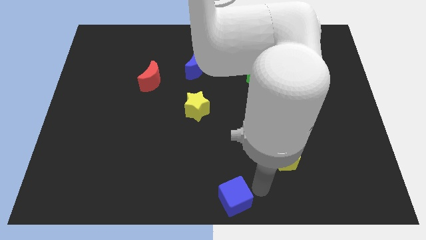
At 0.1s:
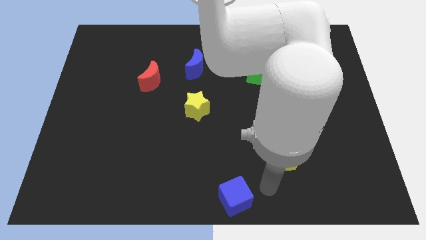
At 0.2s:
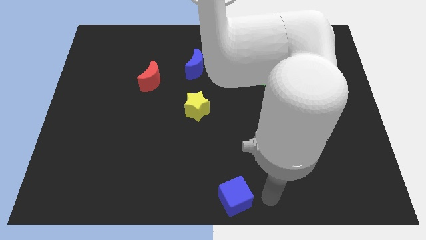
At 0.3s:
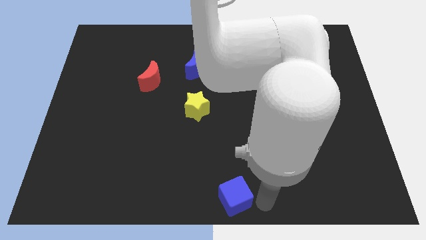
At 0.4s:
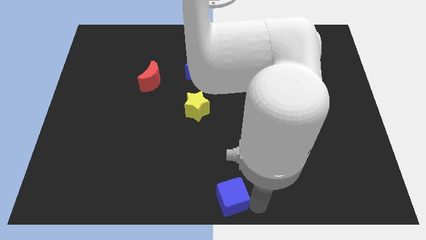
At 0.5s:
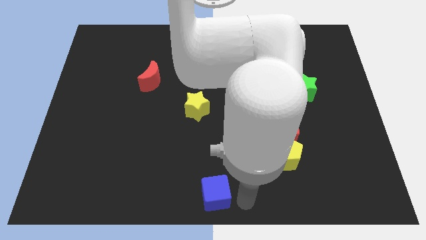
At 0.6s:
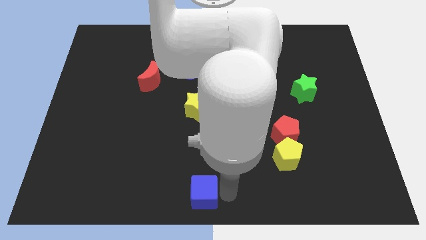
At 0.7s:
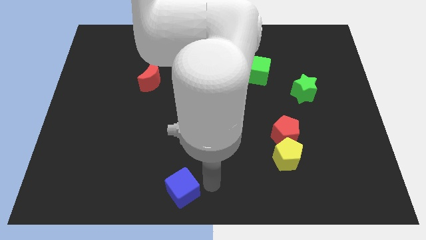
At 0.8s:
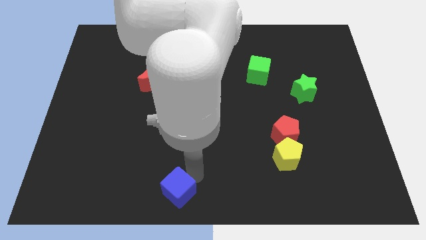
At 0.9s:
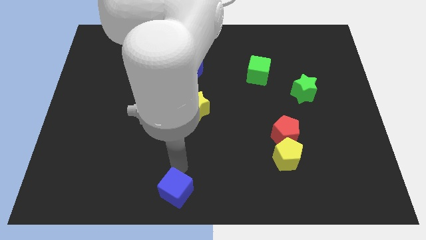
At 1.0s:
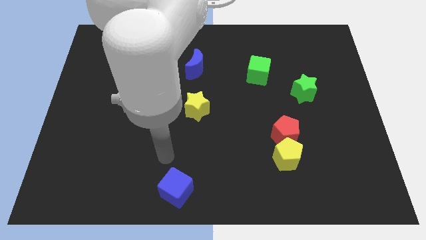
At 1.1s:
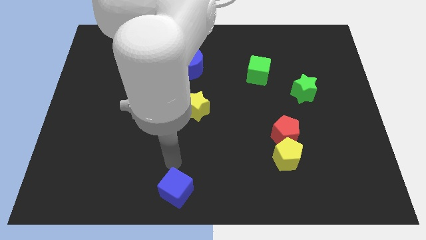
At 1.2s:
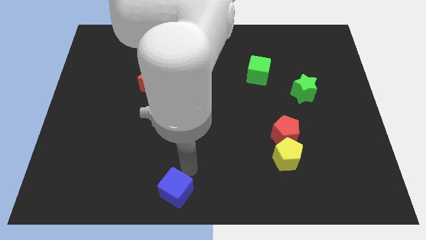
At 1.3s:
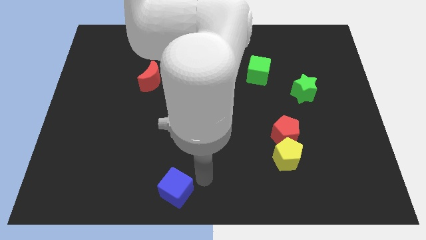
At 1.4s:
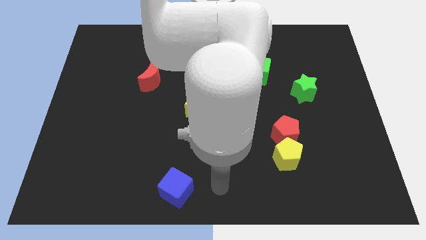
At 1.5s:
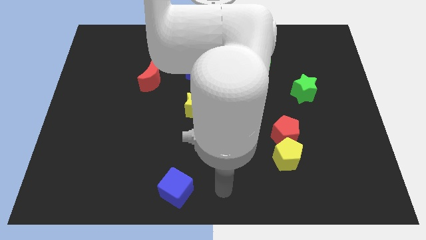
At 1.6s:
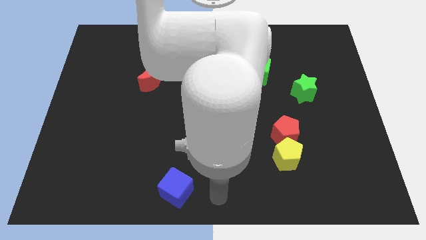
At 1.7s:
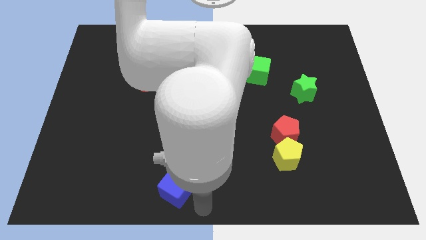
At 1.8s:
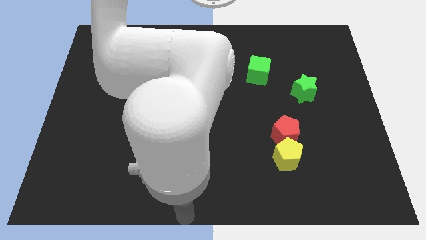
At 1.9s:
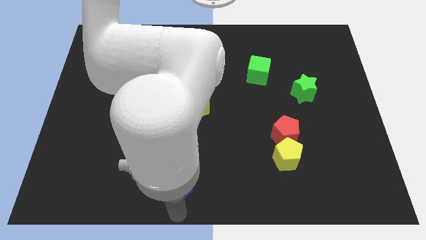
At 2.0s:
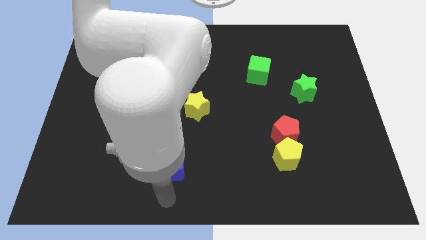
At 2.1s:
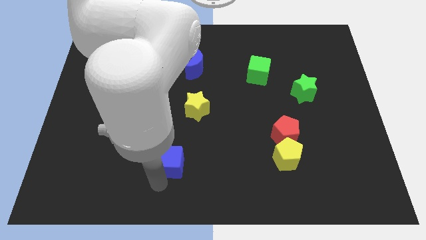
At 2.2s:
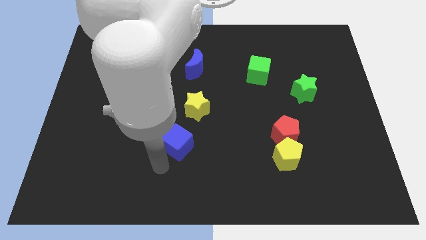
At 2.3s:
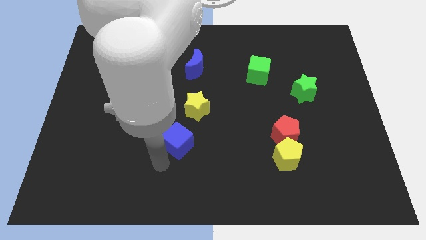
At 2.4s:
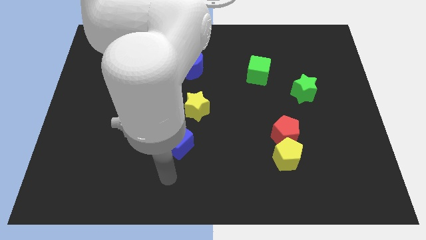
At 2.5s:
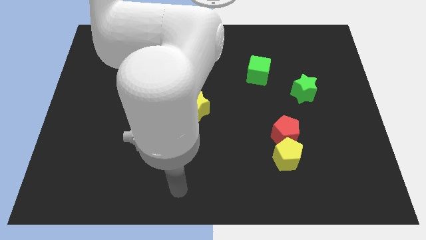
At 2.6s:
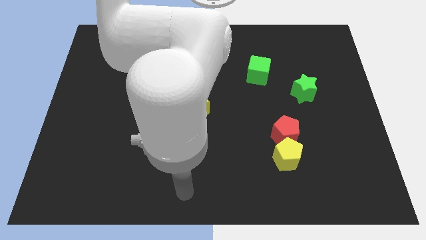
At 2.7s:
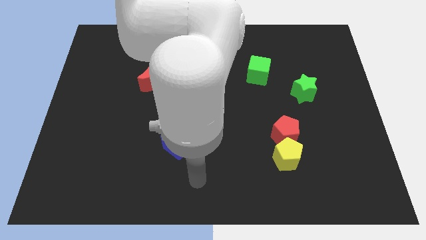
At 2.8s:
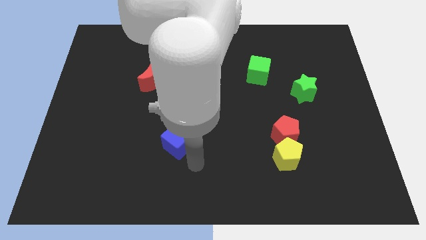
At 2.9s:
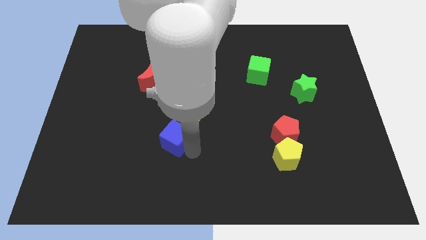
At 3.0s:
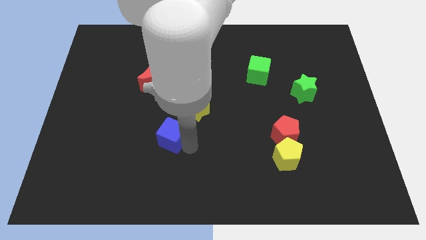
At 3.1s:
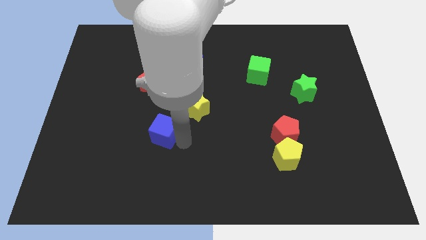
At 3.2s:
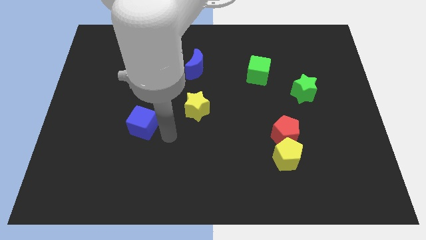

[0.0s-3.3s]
push the blue cube below the red crescent

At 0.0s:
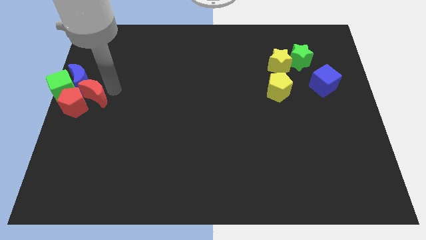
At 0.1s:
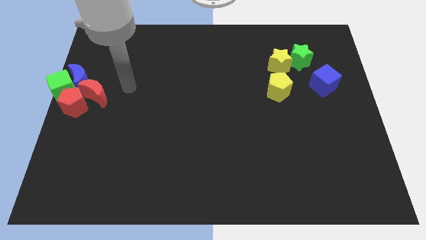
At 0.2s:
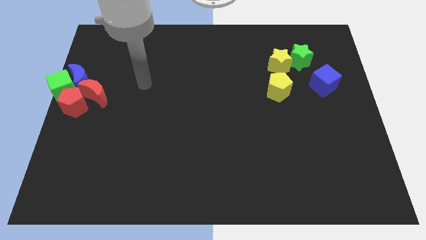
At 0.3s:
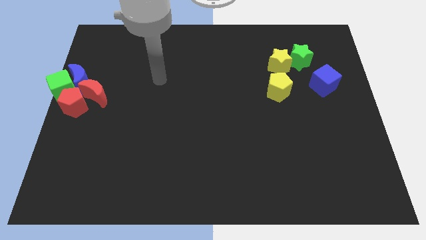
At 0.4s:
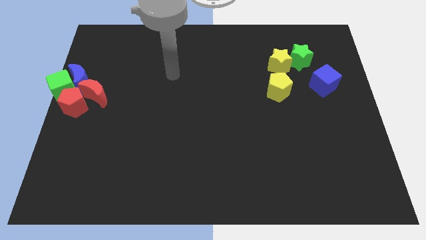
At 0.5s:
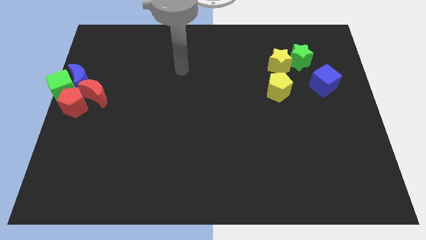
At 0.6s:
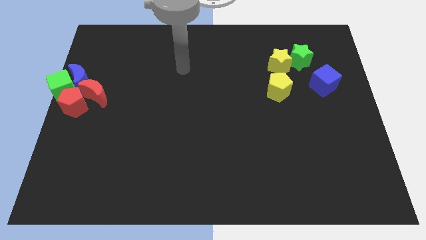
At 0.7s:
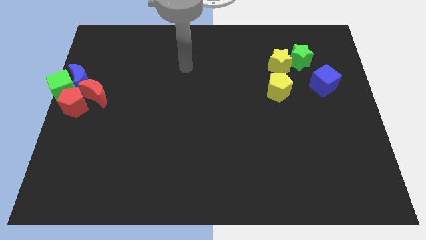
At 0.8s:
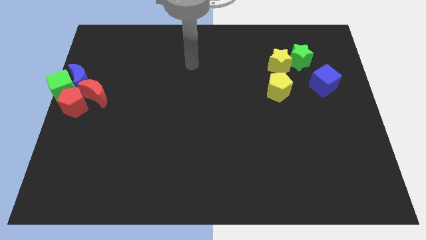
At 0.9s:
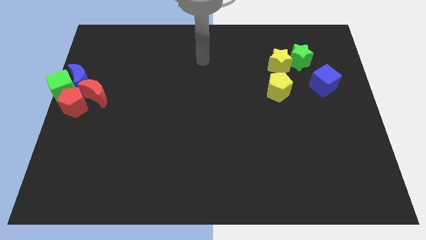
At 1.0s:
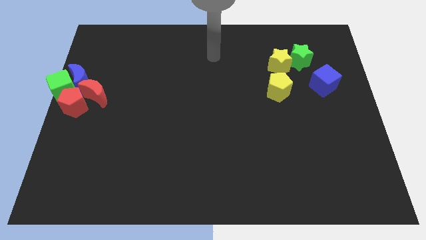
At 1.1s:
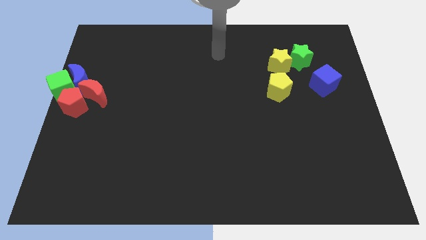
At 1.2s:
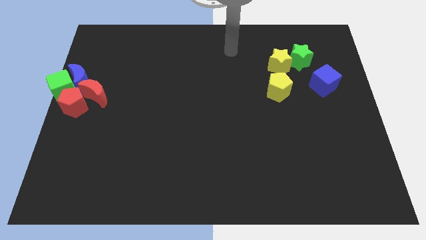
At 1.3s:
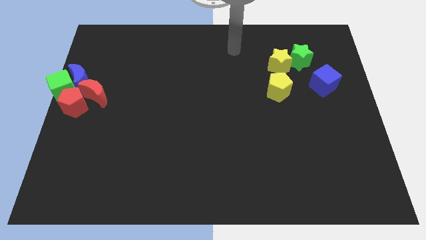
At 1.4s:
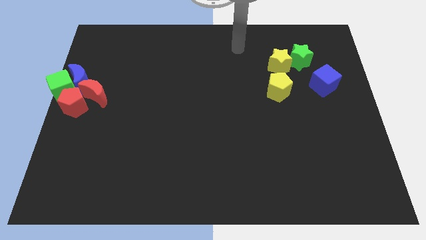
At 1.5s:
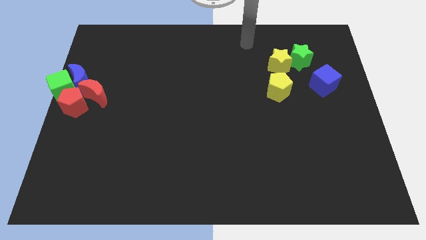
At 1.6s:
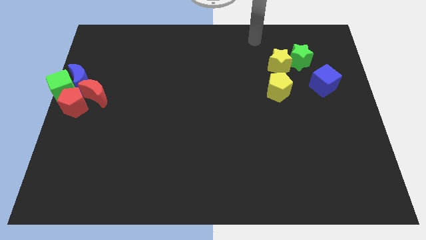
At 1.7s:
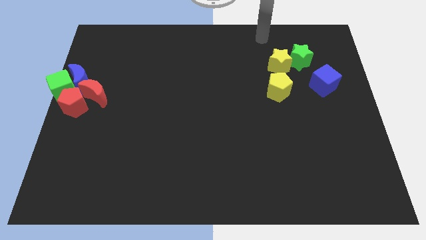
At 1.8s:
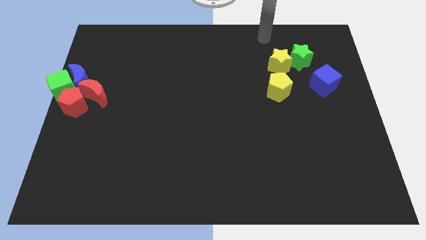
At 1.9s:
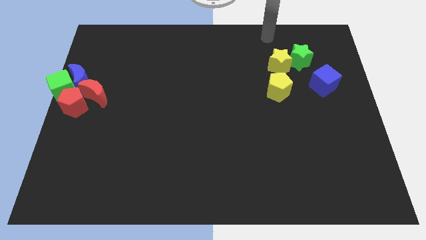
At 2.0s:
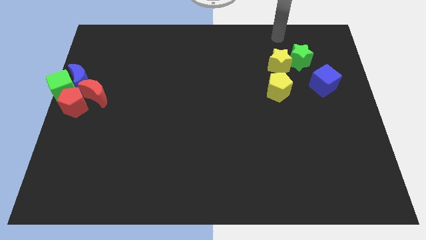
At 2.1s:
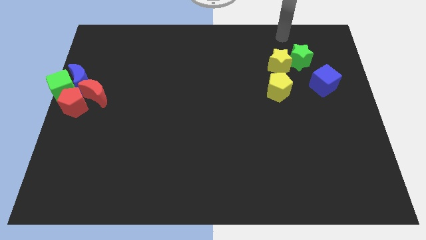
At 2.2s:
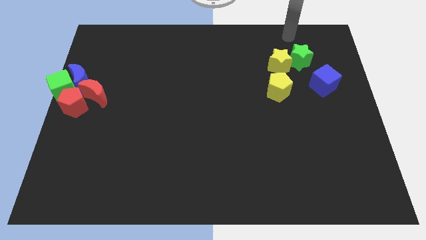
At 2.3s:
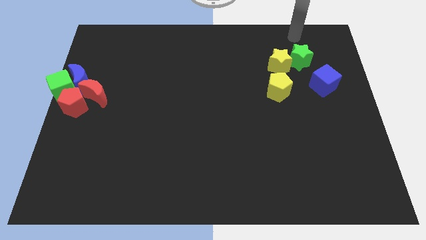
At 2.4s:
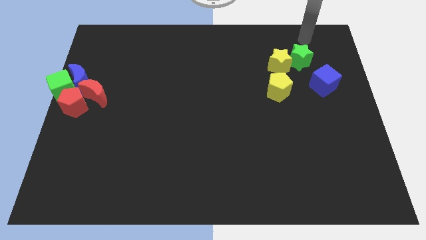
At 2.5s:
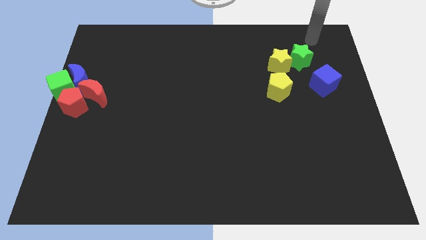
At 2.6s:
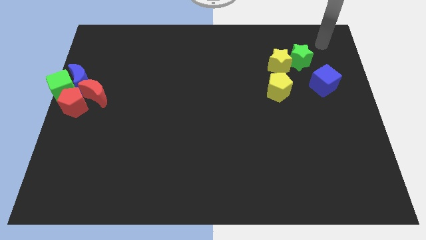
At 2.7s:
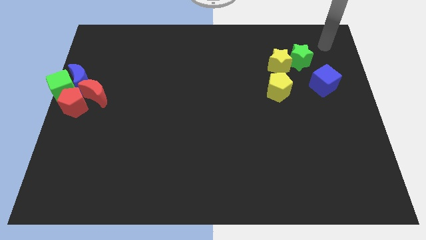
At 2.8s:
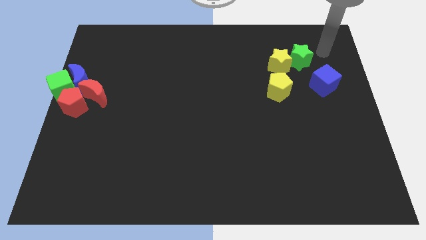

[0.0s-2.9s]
move your arm away from the red moon

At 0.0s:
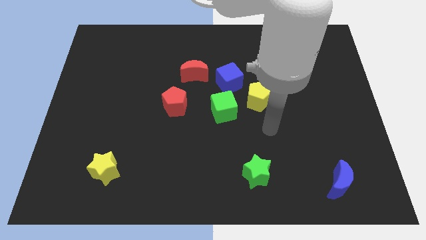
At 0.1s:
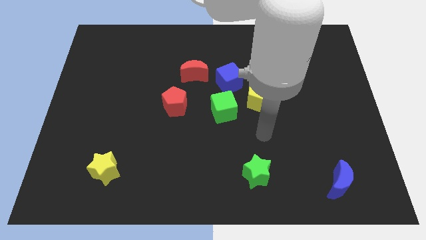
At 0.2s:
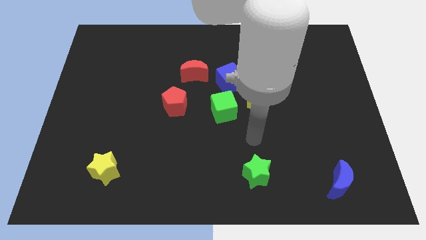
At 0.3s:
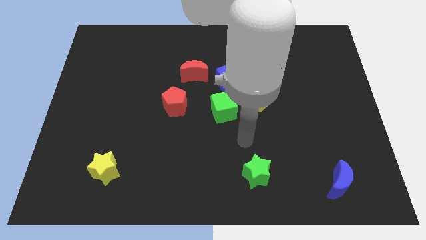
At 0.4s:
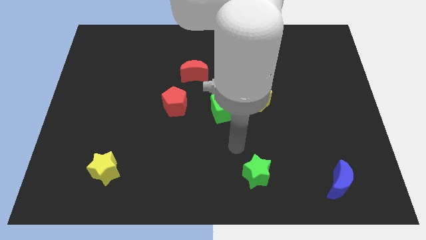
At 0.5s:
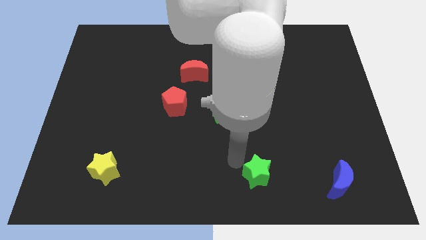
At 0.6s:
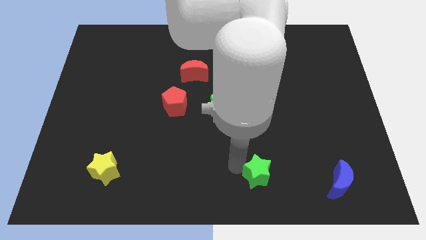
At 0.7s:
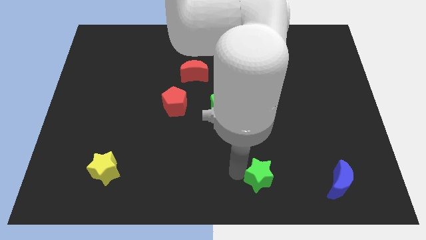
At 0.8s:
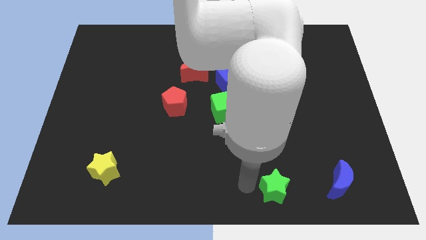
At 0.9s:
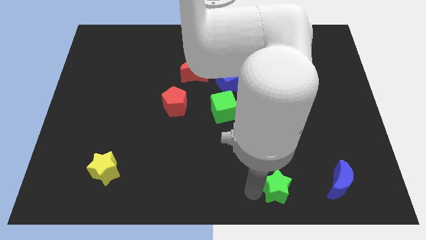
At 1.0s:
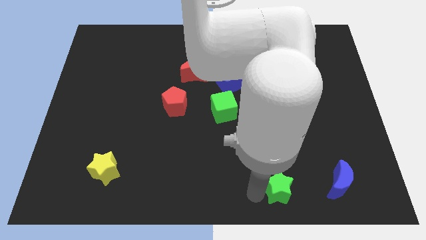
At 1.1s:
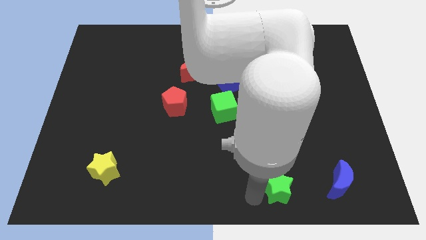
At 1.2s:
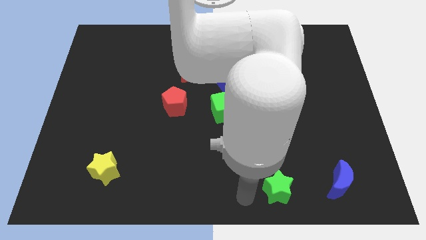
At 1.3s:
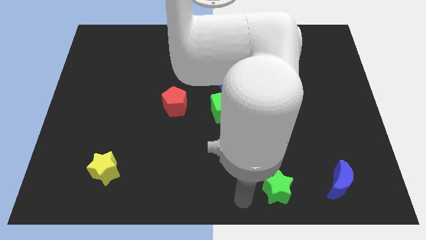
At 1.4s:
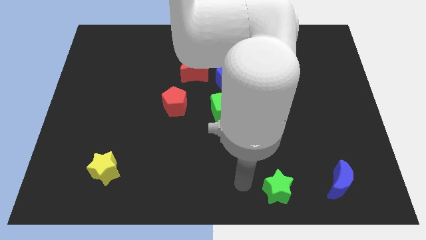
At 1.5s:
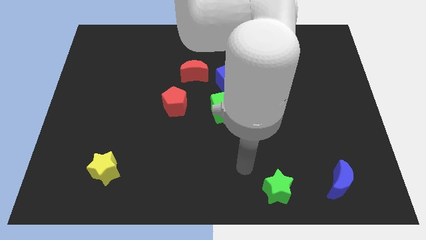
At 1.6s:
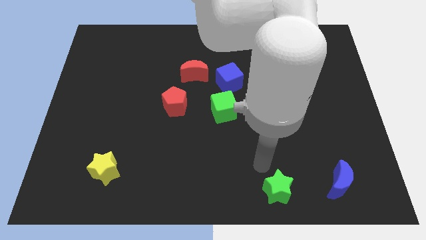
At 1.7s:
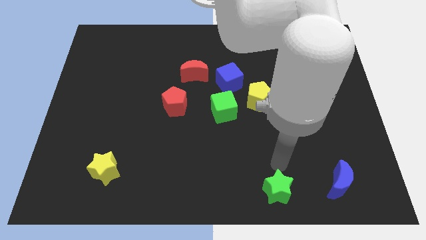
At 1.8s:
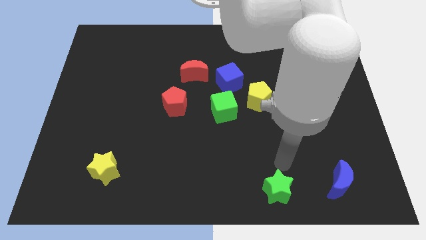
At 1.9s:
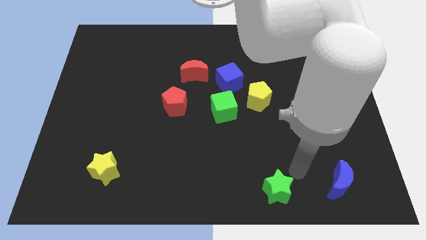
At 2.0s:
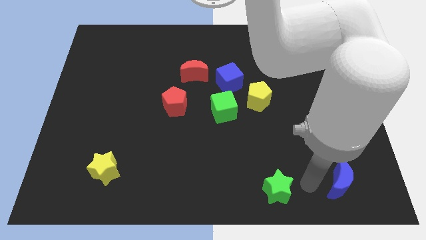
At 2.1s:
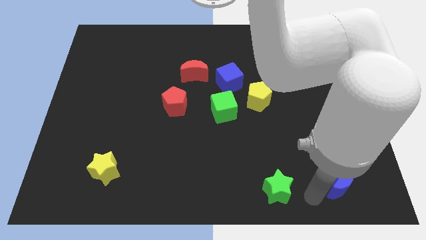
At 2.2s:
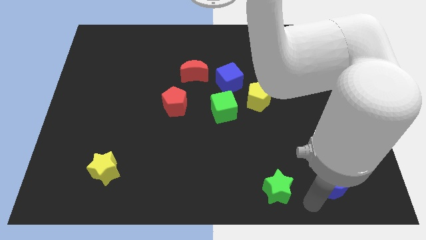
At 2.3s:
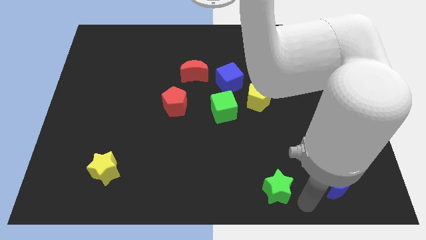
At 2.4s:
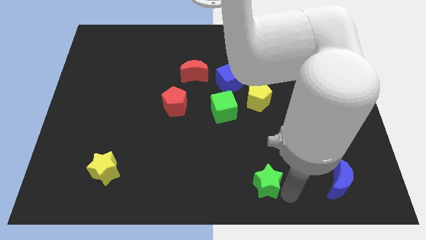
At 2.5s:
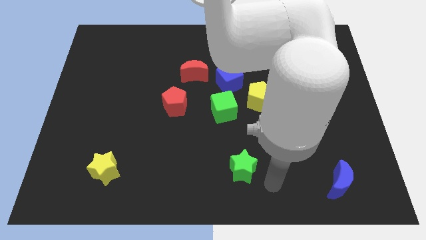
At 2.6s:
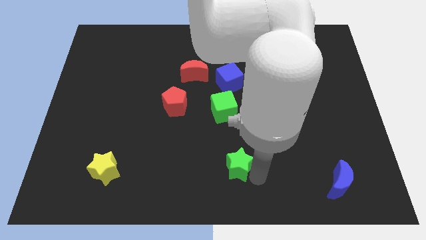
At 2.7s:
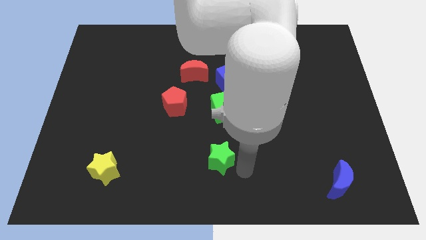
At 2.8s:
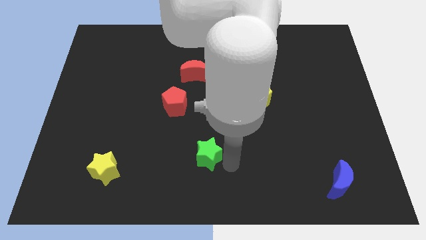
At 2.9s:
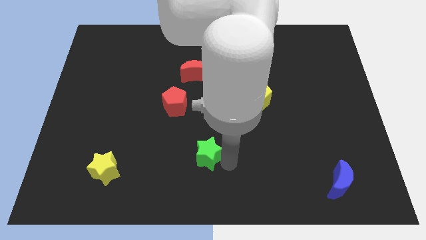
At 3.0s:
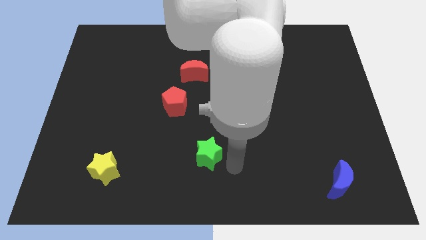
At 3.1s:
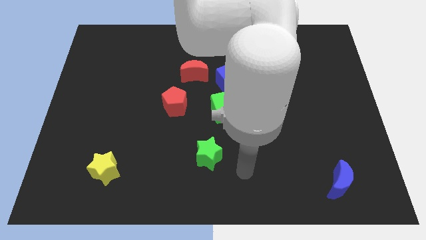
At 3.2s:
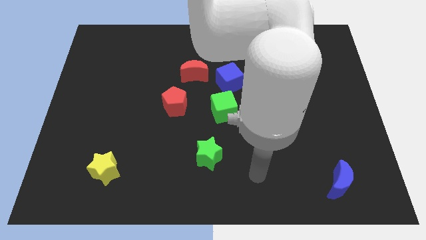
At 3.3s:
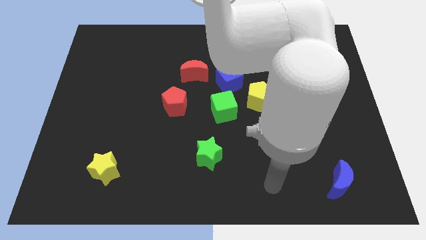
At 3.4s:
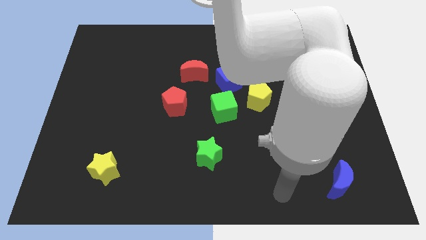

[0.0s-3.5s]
put the green star underneath the green cube
